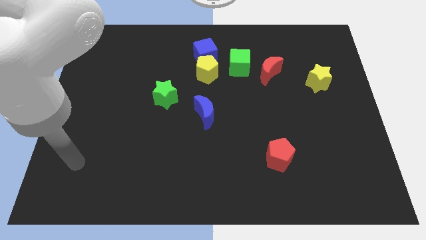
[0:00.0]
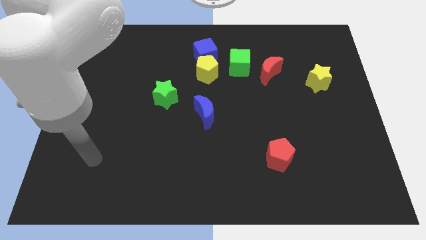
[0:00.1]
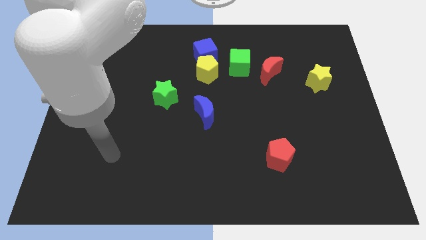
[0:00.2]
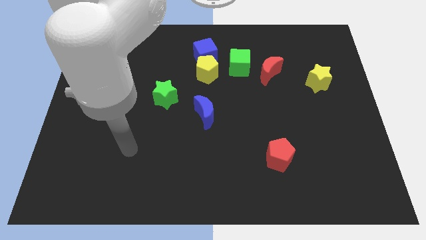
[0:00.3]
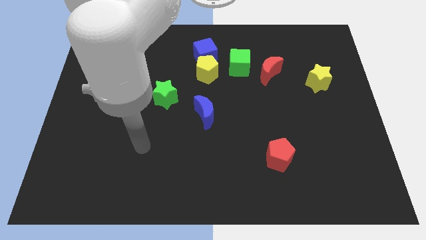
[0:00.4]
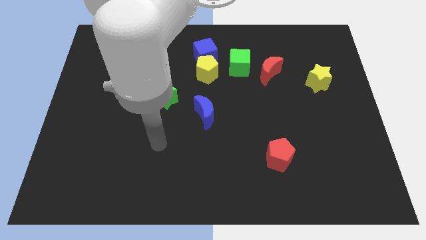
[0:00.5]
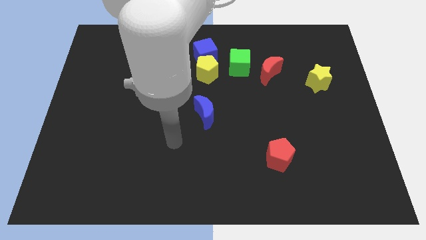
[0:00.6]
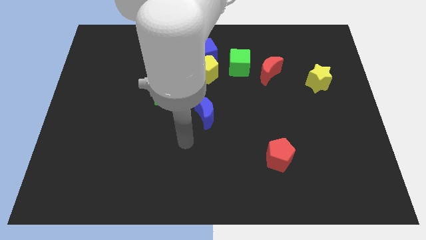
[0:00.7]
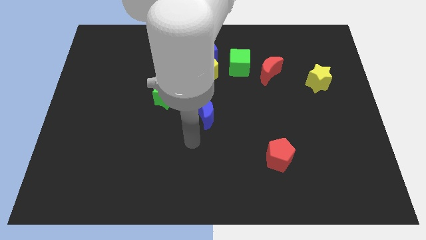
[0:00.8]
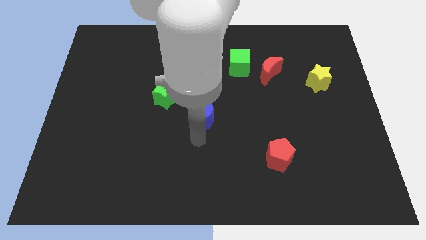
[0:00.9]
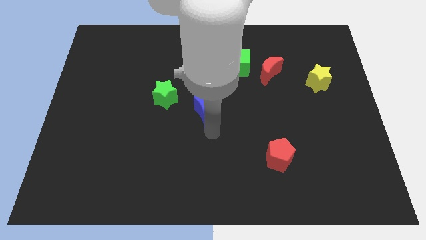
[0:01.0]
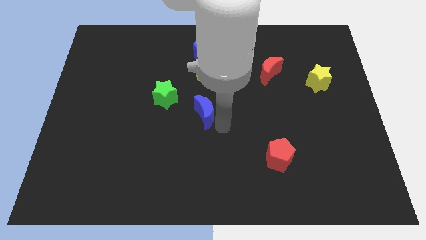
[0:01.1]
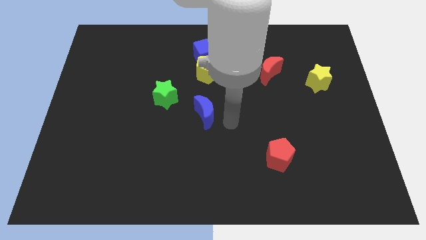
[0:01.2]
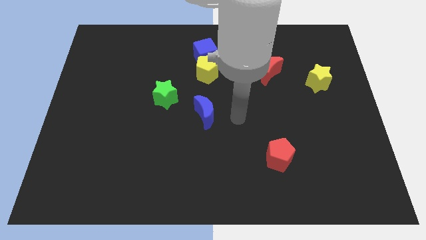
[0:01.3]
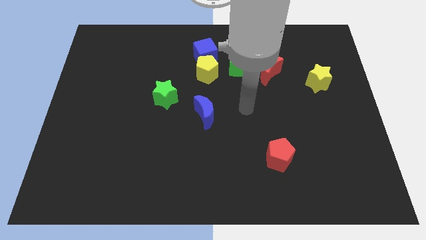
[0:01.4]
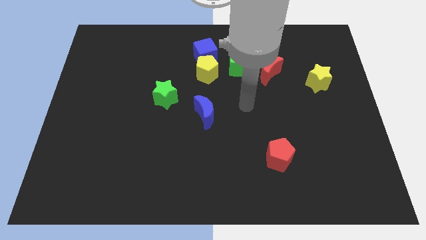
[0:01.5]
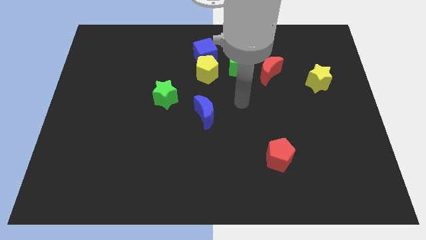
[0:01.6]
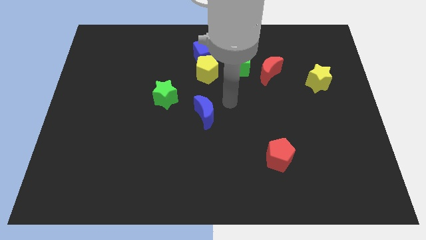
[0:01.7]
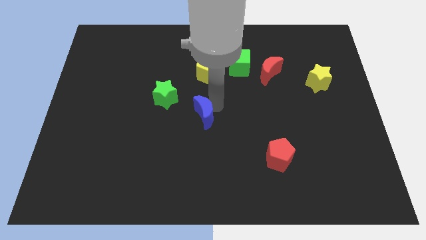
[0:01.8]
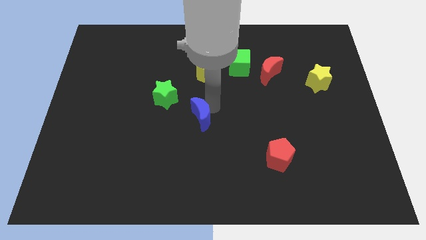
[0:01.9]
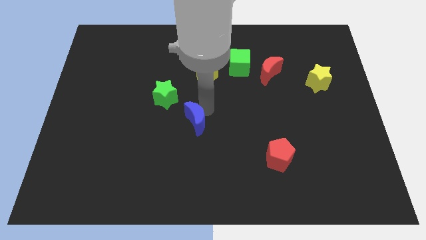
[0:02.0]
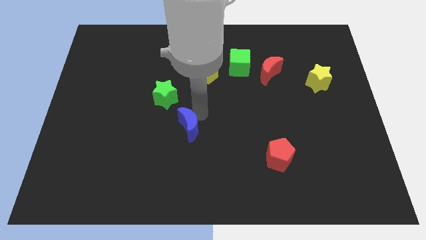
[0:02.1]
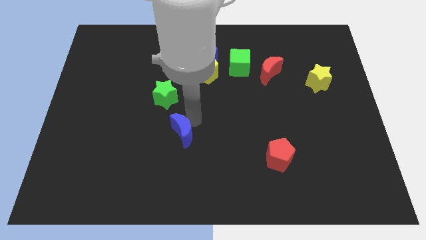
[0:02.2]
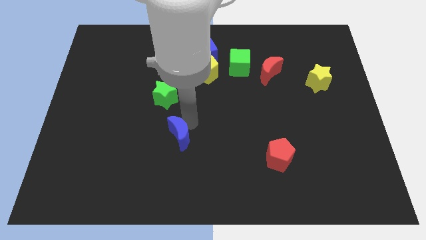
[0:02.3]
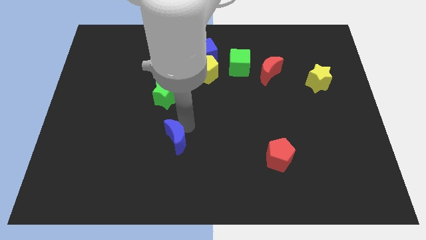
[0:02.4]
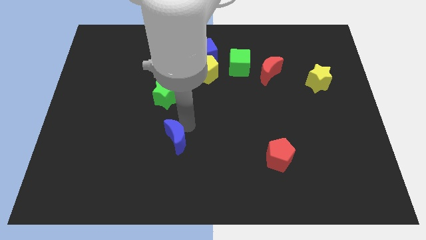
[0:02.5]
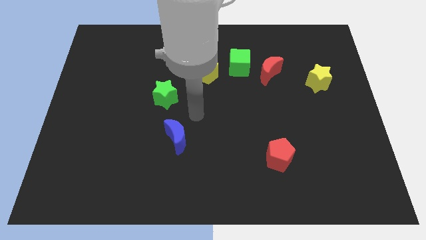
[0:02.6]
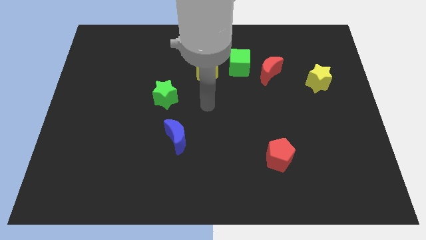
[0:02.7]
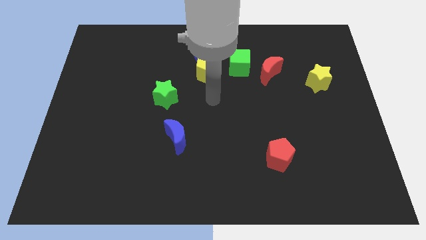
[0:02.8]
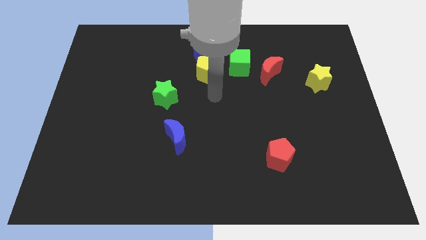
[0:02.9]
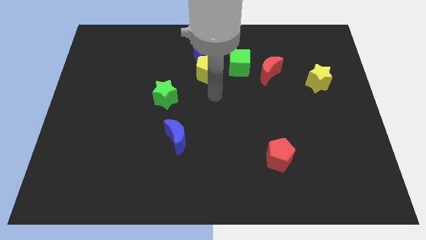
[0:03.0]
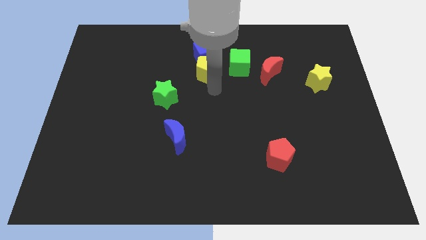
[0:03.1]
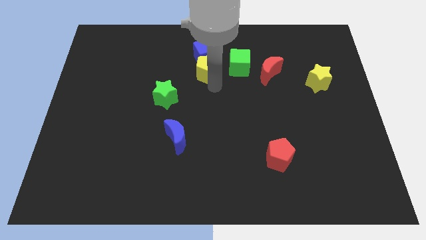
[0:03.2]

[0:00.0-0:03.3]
move the blue moon down to the green star

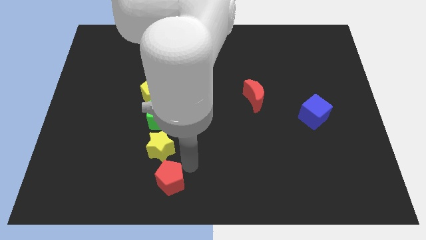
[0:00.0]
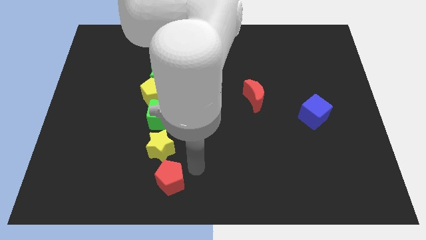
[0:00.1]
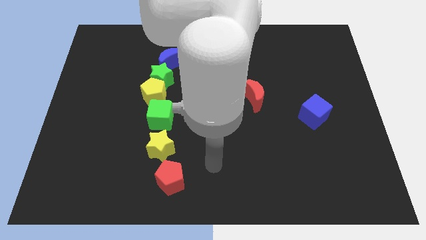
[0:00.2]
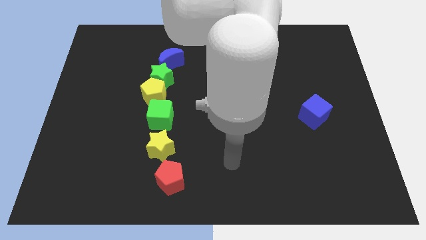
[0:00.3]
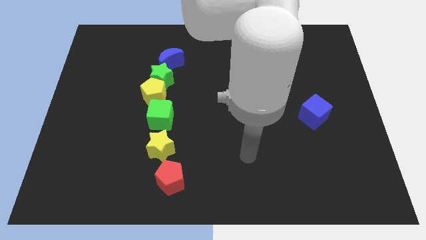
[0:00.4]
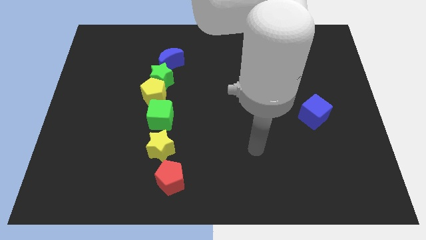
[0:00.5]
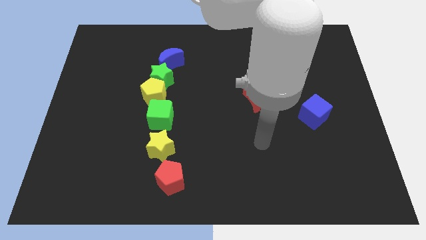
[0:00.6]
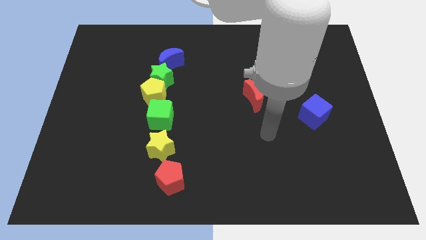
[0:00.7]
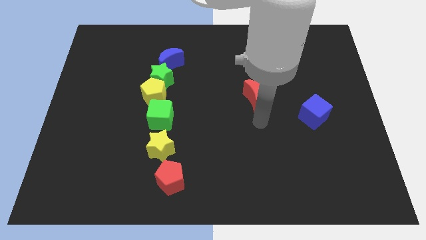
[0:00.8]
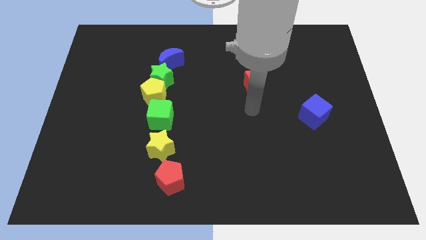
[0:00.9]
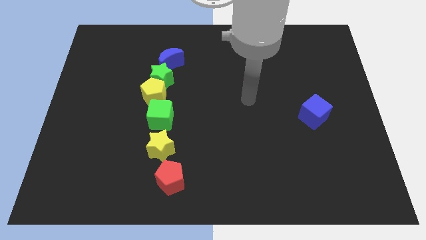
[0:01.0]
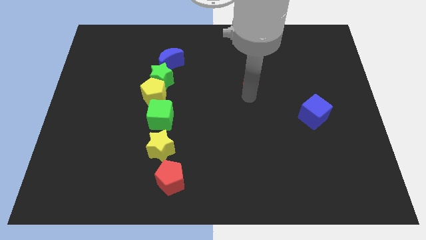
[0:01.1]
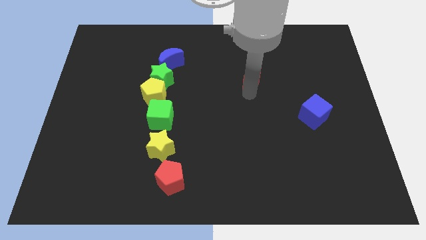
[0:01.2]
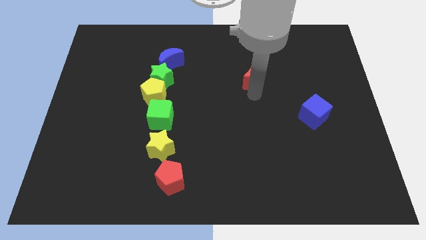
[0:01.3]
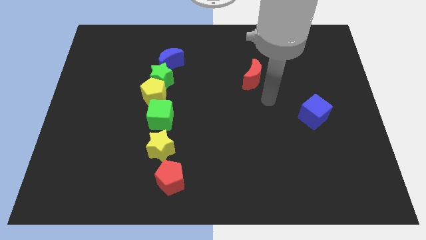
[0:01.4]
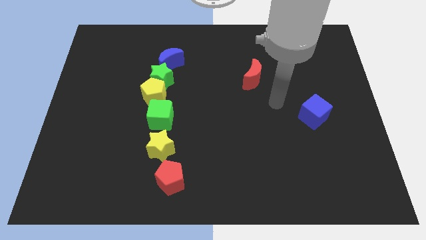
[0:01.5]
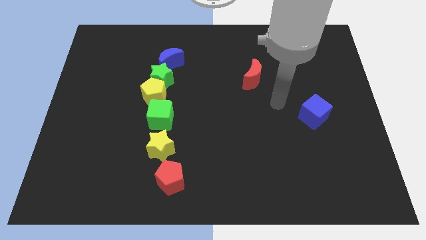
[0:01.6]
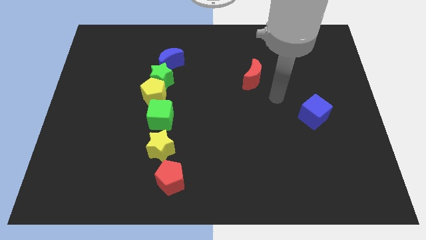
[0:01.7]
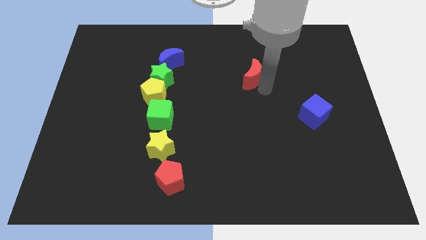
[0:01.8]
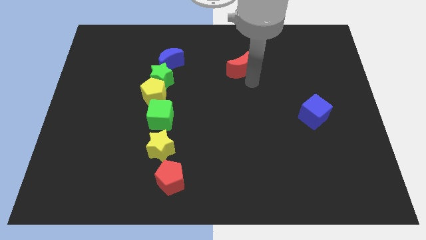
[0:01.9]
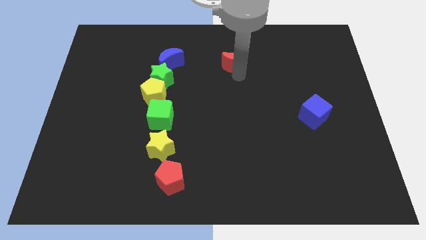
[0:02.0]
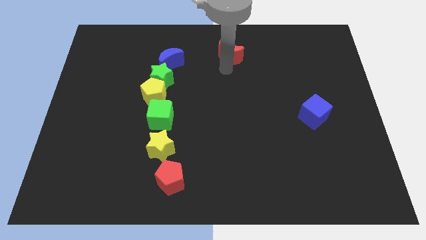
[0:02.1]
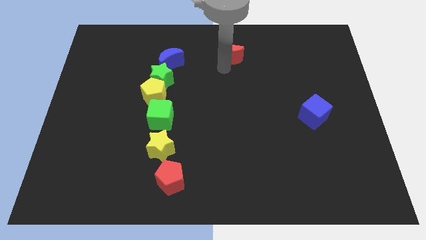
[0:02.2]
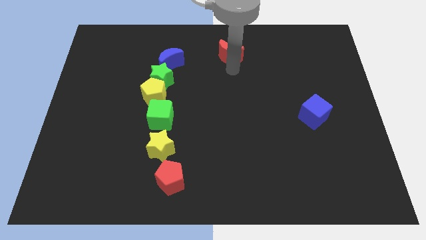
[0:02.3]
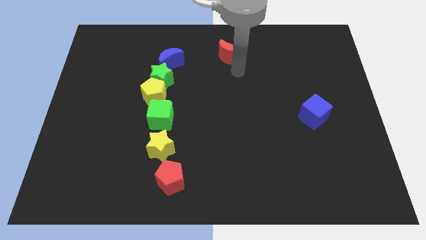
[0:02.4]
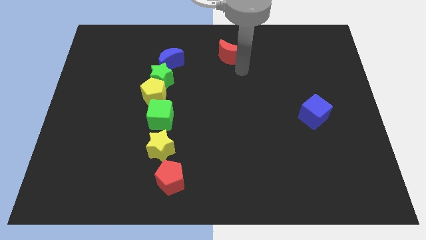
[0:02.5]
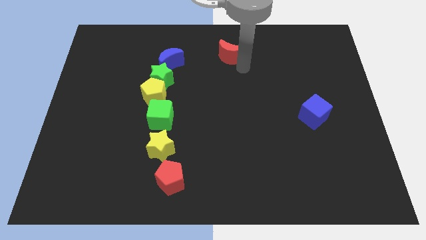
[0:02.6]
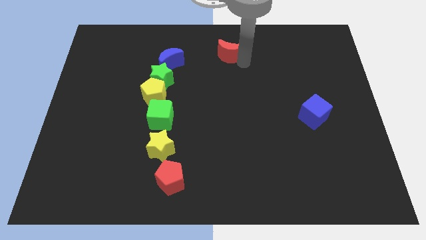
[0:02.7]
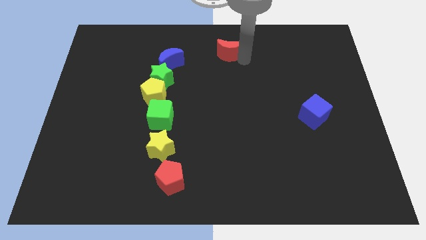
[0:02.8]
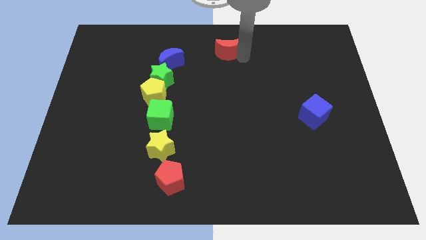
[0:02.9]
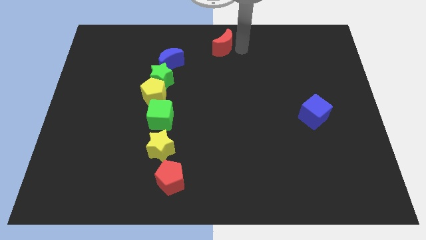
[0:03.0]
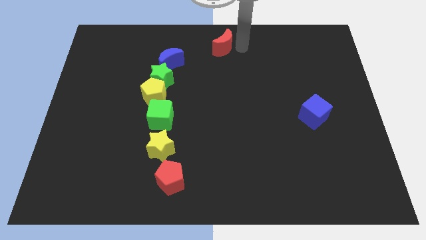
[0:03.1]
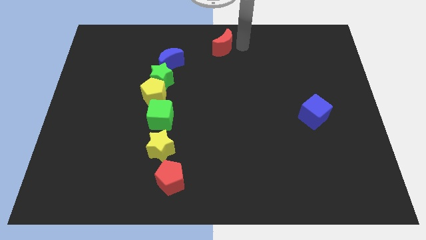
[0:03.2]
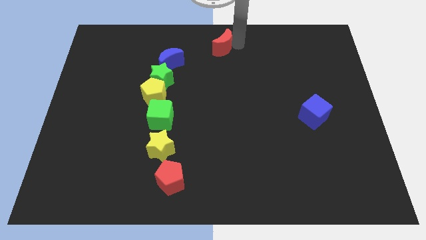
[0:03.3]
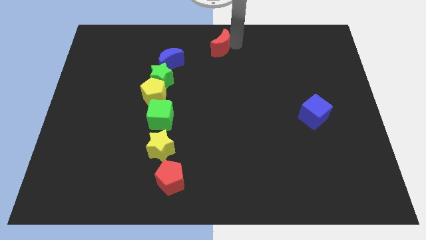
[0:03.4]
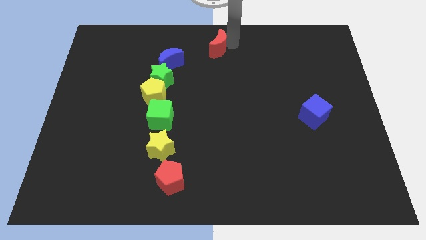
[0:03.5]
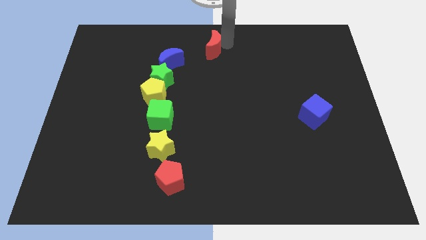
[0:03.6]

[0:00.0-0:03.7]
move the red crescent to the top center of the table

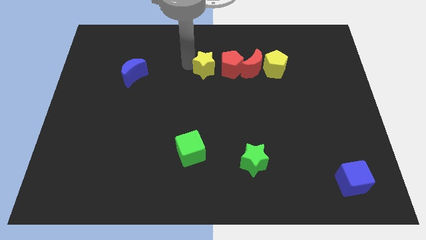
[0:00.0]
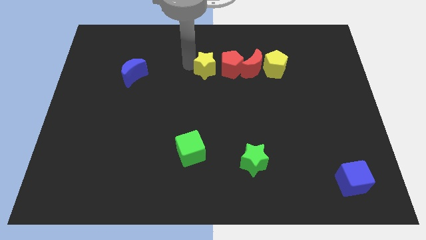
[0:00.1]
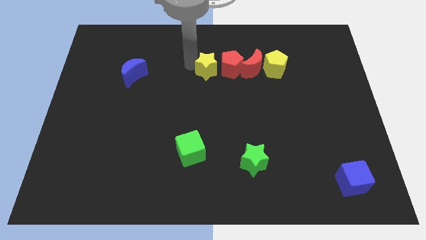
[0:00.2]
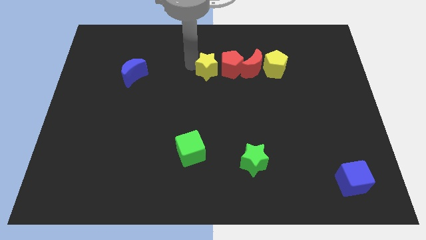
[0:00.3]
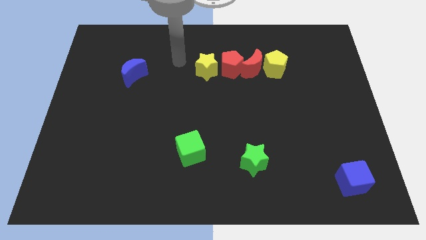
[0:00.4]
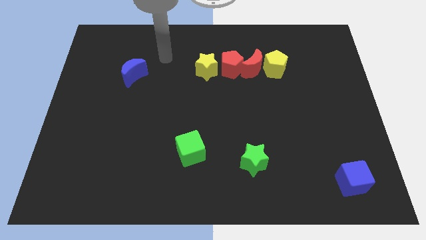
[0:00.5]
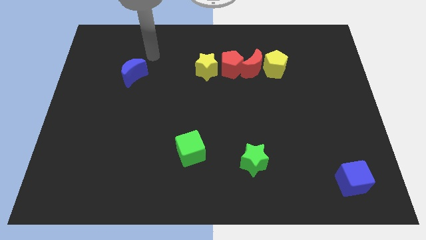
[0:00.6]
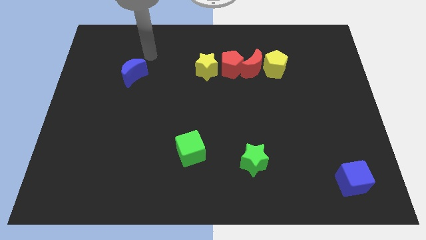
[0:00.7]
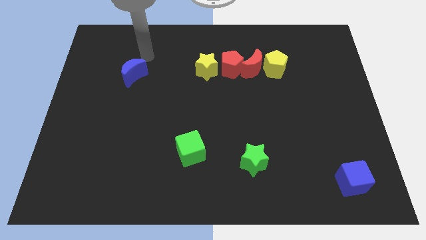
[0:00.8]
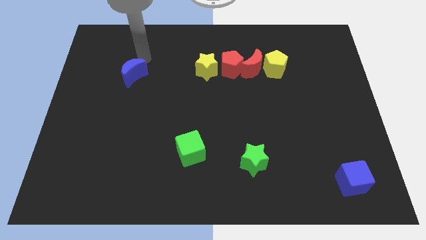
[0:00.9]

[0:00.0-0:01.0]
push yellow star towards red pentagon

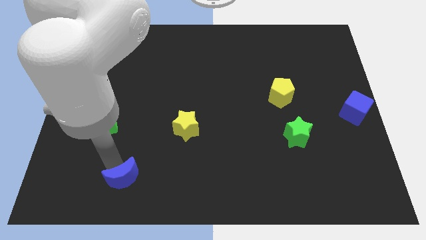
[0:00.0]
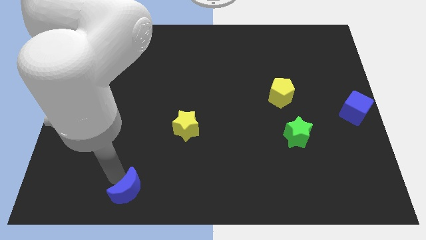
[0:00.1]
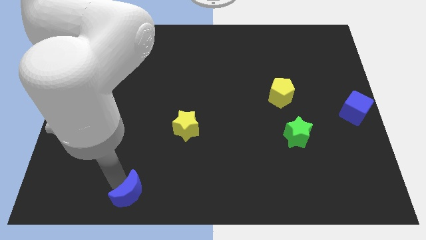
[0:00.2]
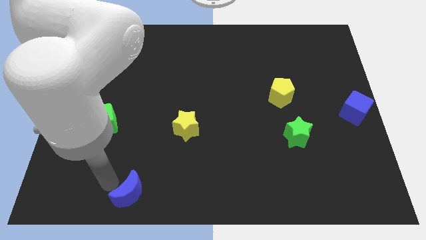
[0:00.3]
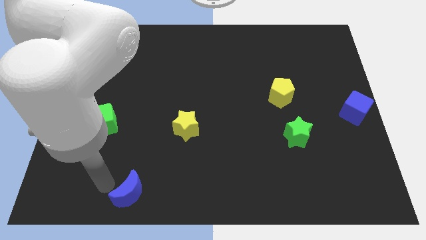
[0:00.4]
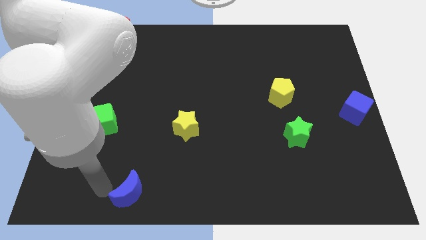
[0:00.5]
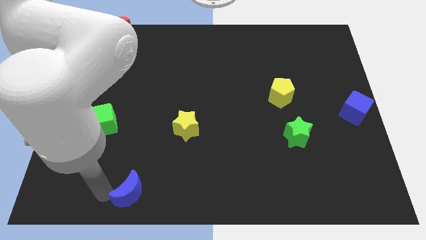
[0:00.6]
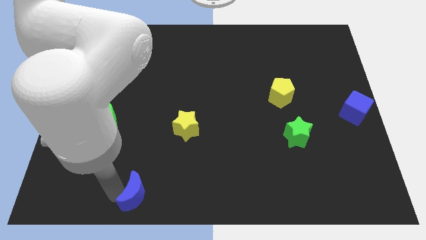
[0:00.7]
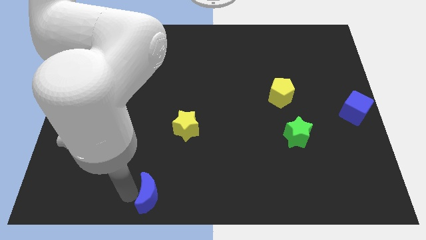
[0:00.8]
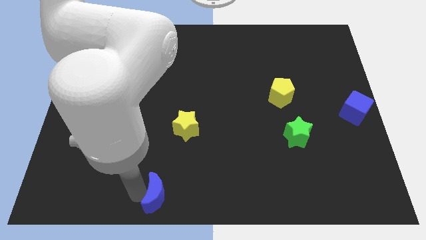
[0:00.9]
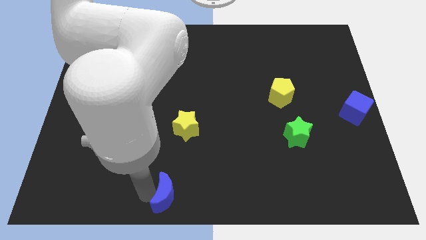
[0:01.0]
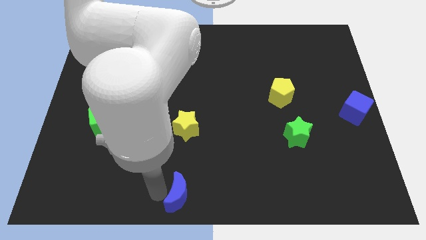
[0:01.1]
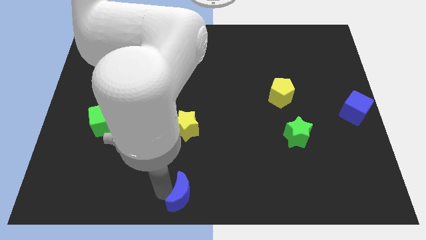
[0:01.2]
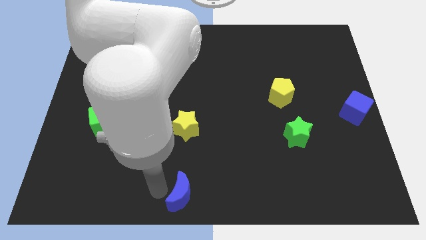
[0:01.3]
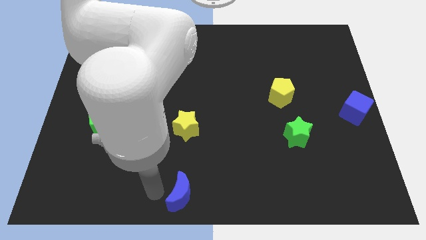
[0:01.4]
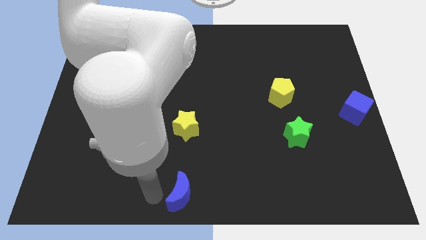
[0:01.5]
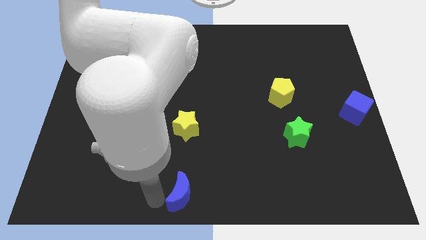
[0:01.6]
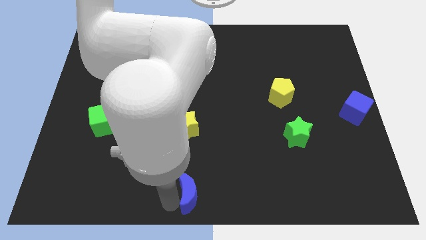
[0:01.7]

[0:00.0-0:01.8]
push blue crescent below yellow star
